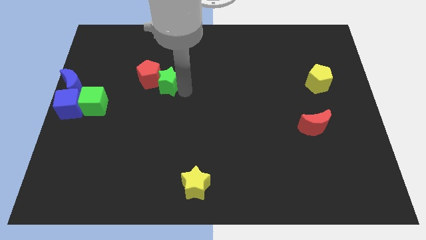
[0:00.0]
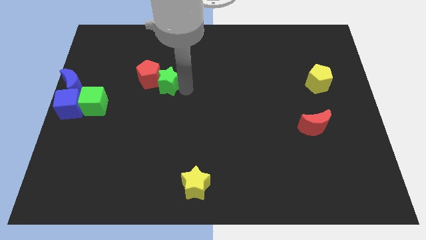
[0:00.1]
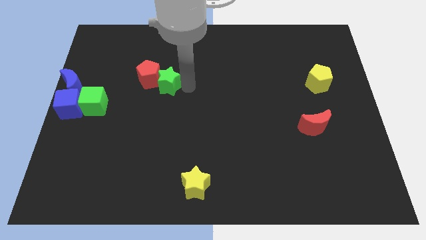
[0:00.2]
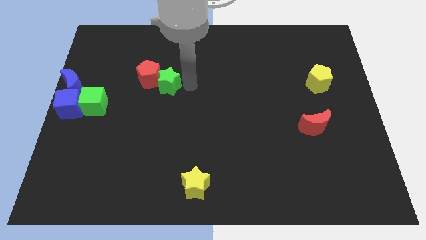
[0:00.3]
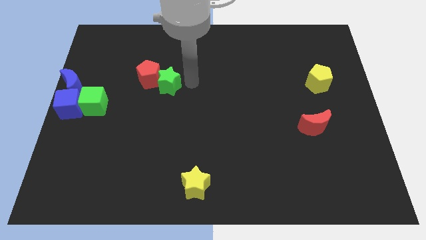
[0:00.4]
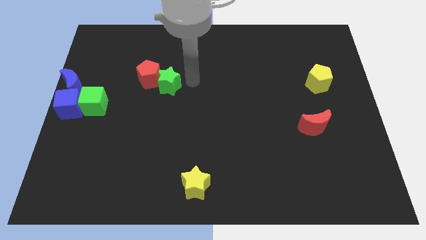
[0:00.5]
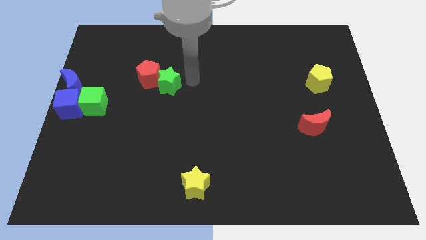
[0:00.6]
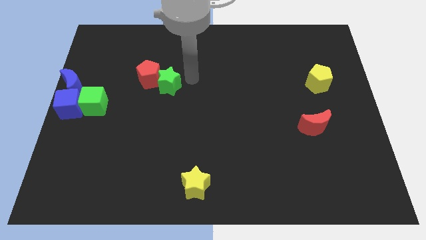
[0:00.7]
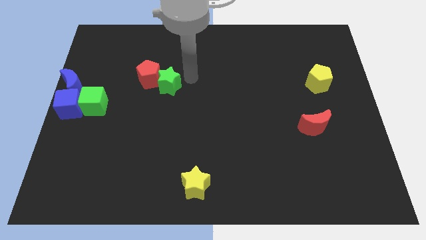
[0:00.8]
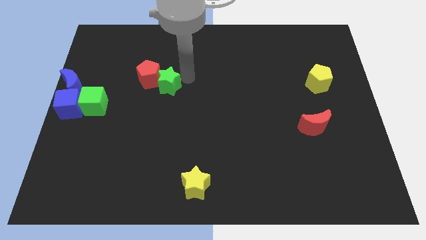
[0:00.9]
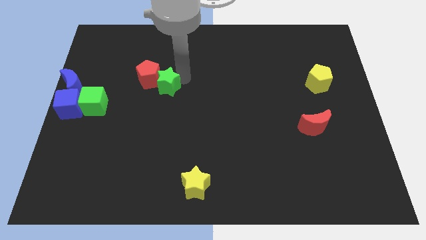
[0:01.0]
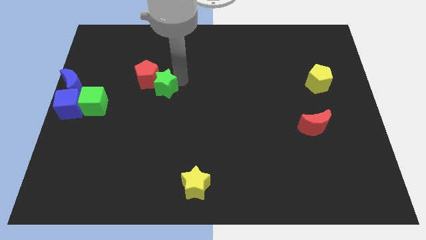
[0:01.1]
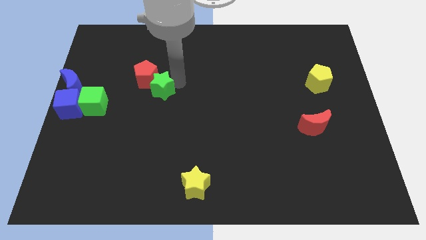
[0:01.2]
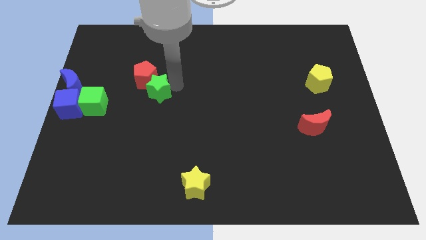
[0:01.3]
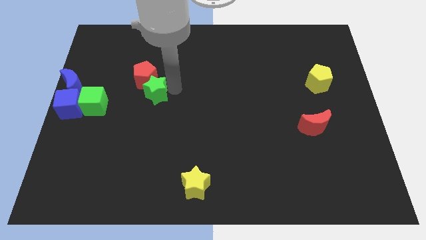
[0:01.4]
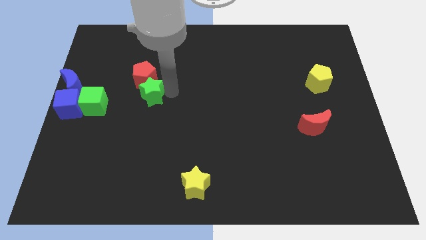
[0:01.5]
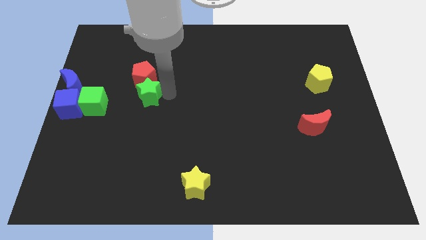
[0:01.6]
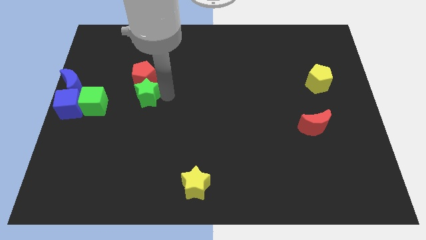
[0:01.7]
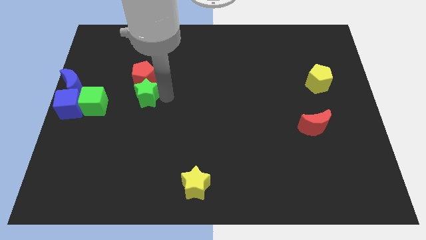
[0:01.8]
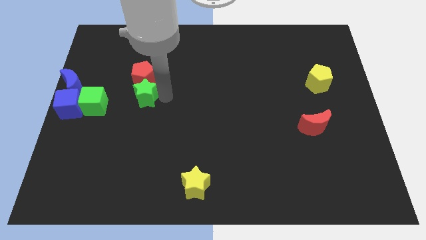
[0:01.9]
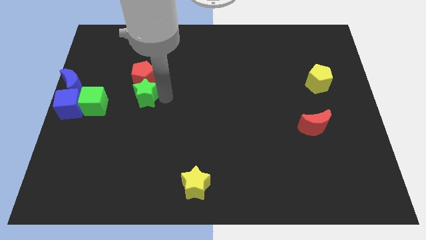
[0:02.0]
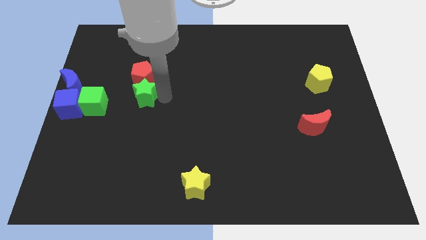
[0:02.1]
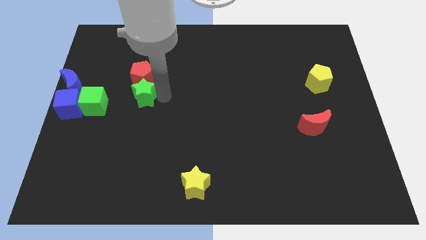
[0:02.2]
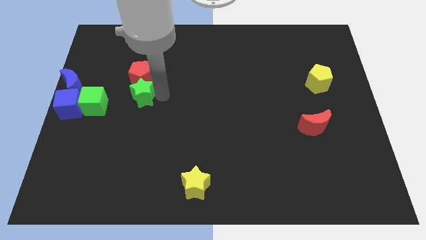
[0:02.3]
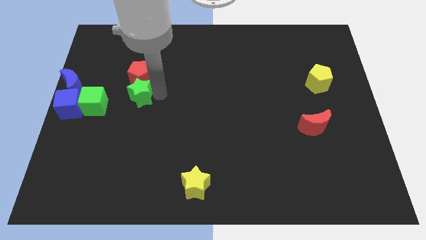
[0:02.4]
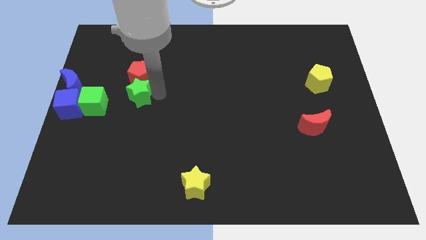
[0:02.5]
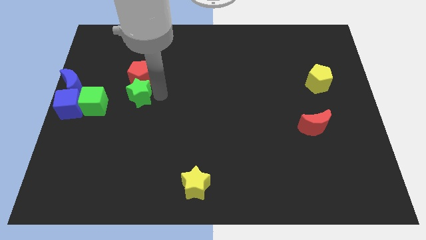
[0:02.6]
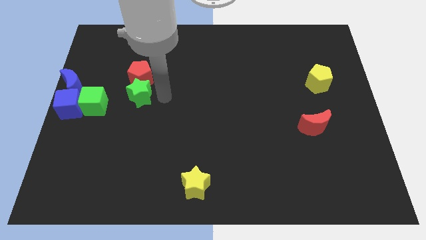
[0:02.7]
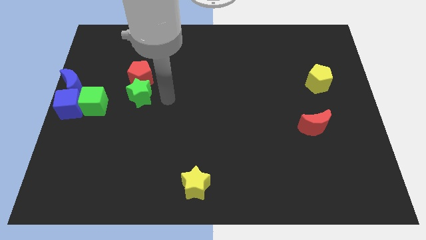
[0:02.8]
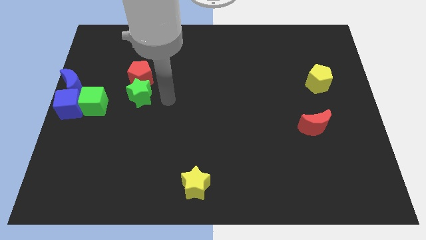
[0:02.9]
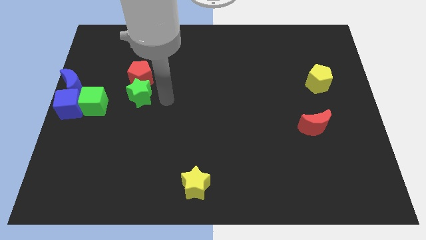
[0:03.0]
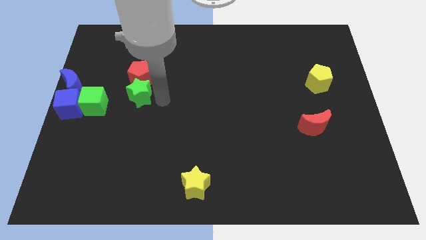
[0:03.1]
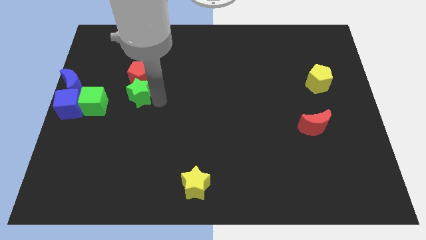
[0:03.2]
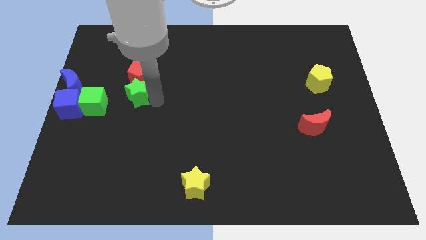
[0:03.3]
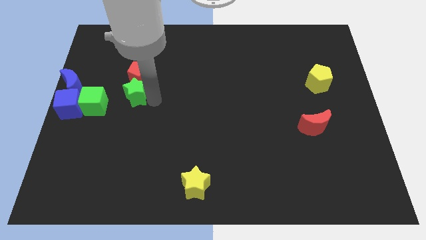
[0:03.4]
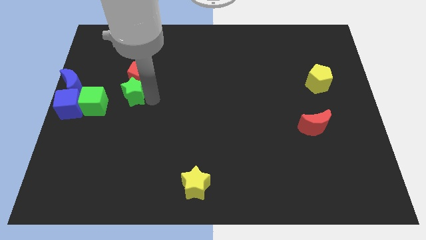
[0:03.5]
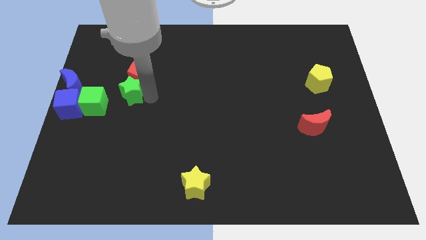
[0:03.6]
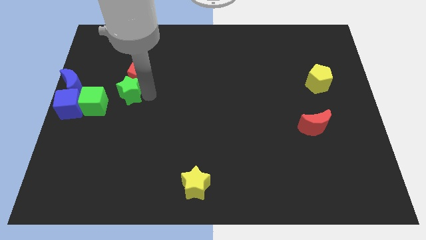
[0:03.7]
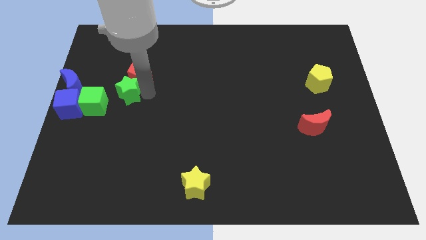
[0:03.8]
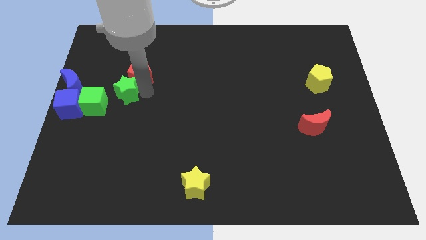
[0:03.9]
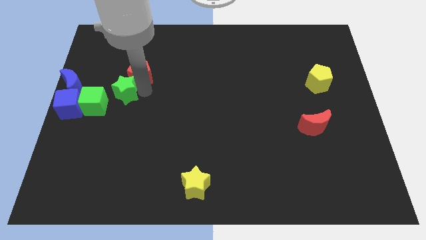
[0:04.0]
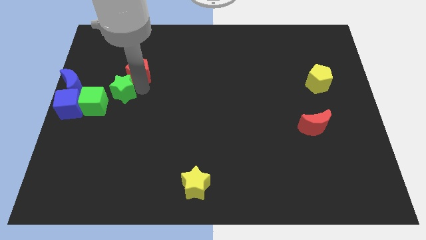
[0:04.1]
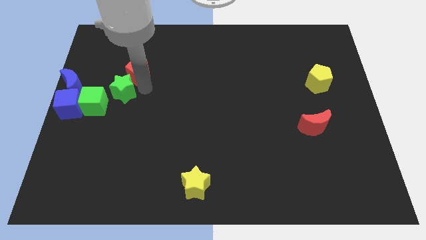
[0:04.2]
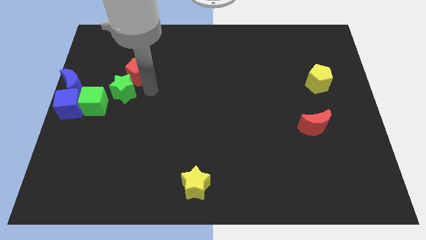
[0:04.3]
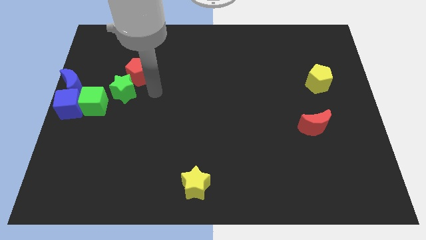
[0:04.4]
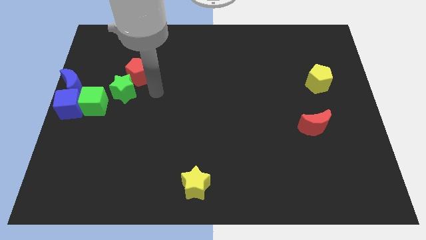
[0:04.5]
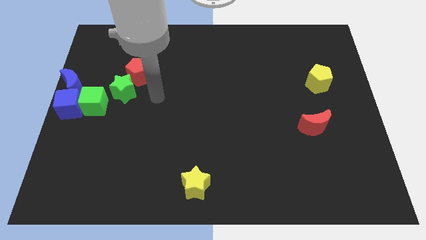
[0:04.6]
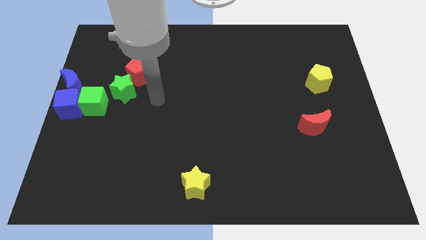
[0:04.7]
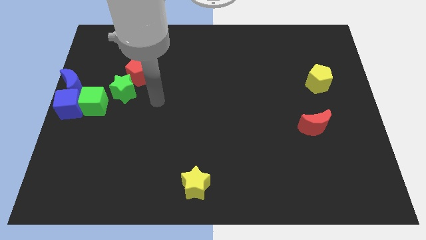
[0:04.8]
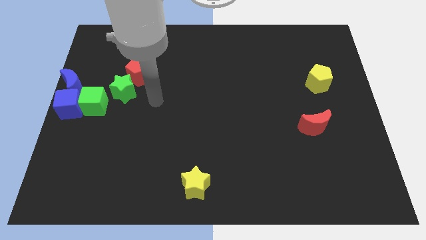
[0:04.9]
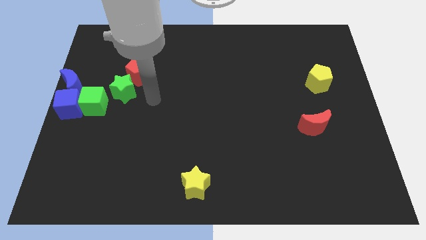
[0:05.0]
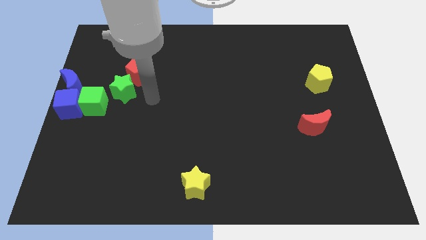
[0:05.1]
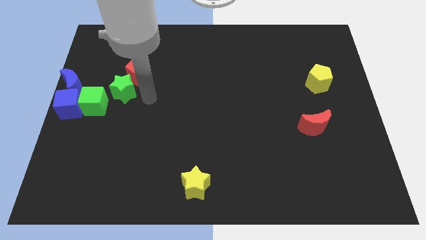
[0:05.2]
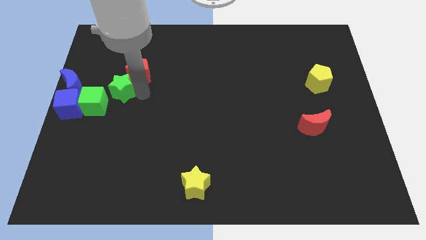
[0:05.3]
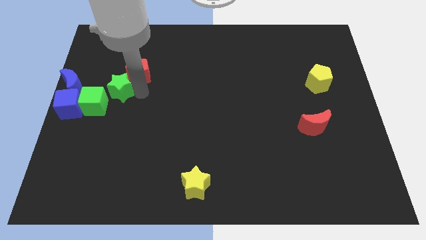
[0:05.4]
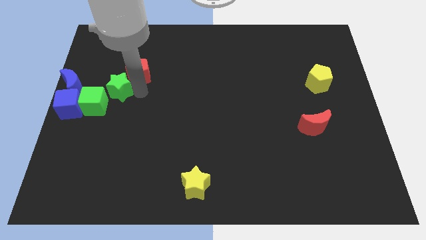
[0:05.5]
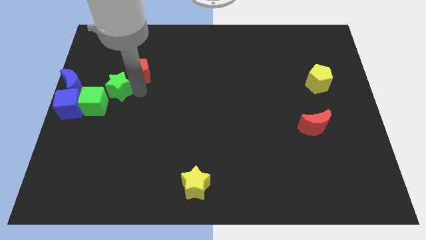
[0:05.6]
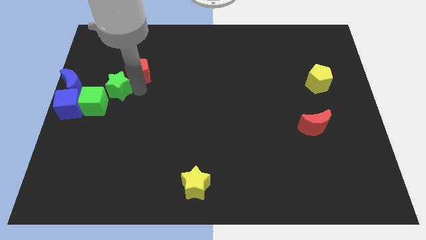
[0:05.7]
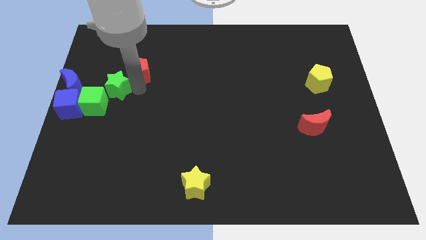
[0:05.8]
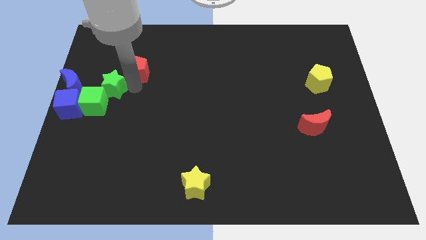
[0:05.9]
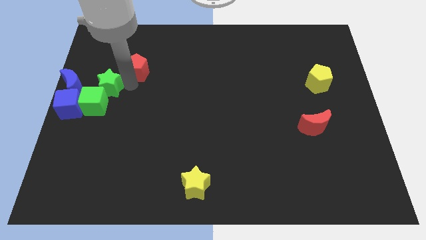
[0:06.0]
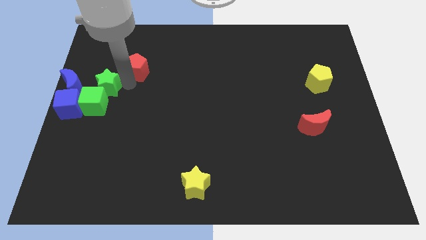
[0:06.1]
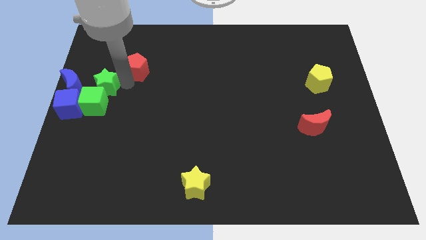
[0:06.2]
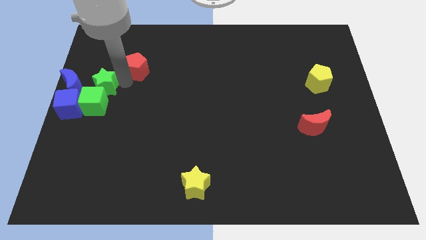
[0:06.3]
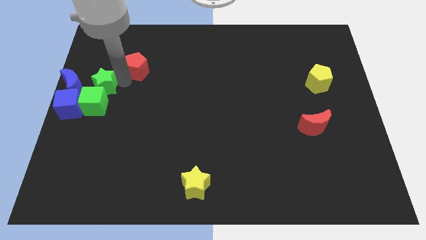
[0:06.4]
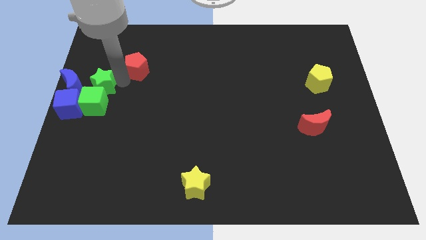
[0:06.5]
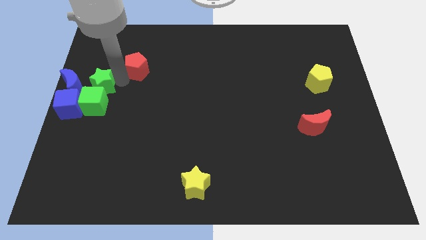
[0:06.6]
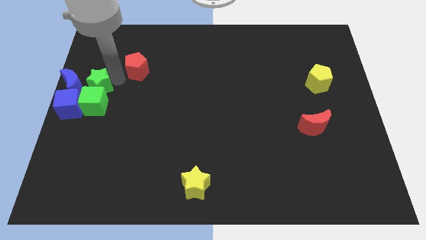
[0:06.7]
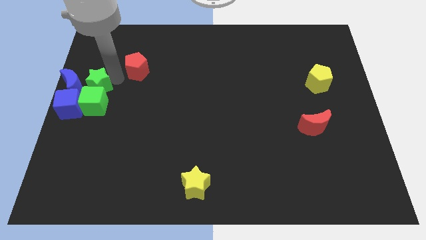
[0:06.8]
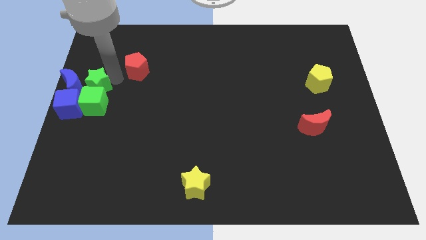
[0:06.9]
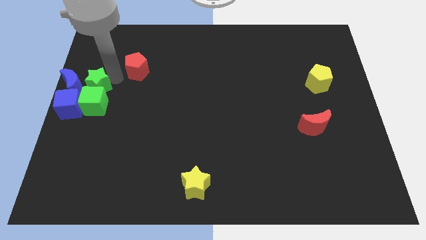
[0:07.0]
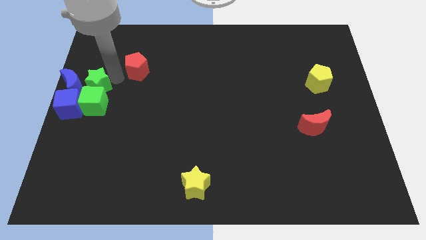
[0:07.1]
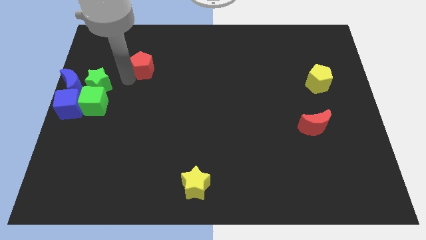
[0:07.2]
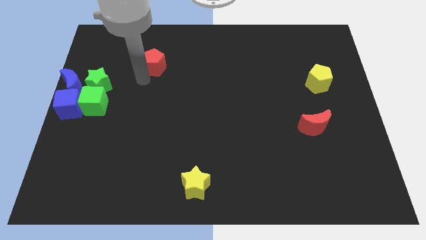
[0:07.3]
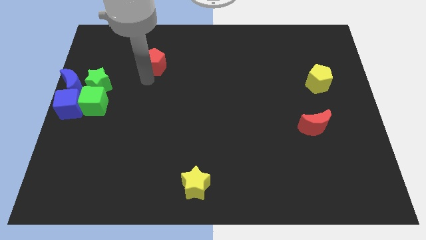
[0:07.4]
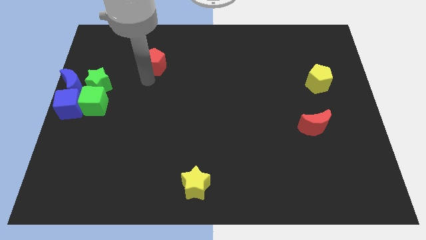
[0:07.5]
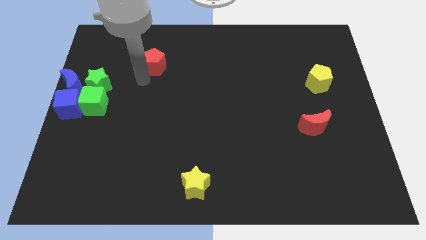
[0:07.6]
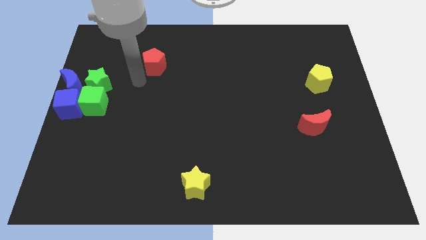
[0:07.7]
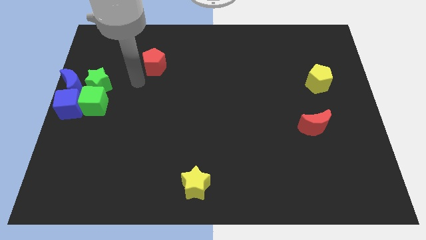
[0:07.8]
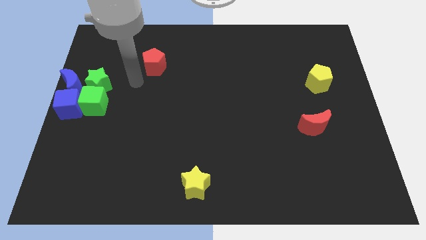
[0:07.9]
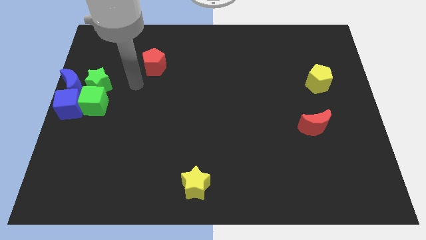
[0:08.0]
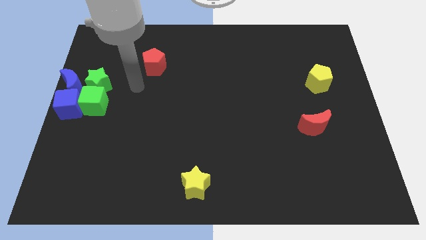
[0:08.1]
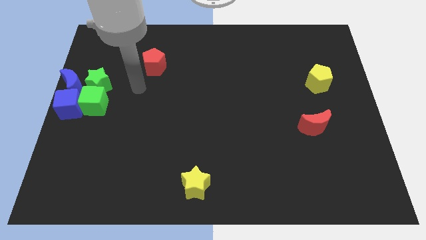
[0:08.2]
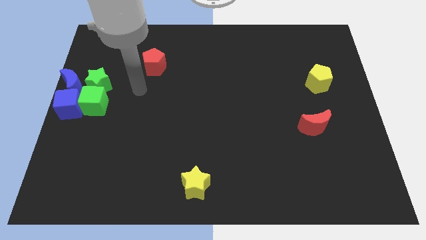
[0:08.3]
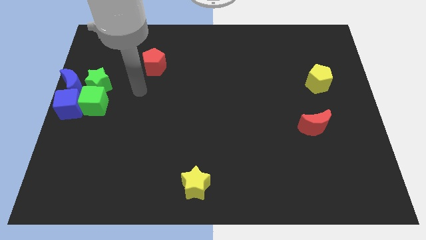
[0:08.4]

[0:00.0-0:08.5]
place the green star to the top of green cube

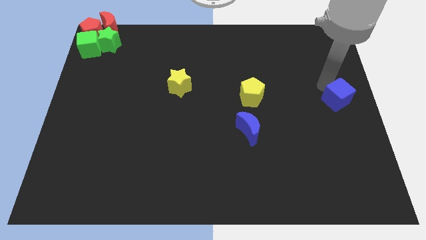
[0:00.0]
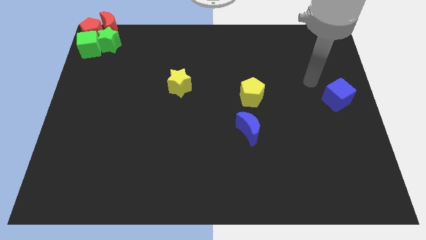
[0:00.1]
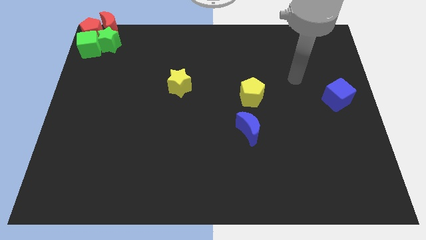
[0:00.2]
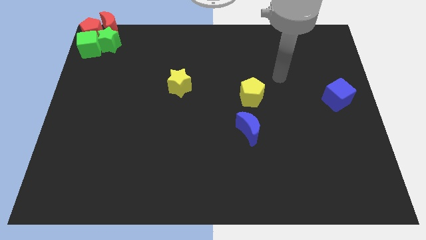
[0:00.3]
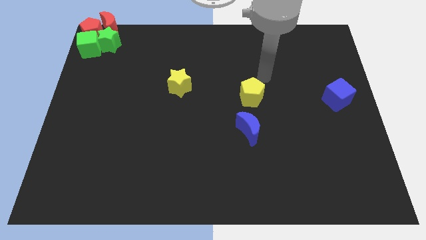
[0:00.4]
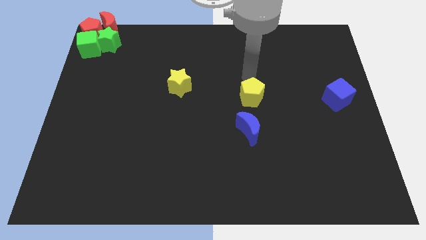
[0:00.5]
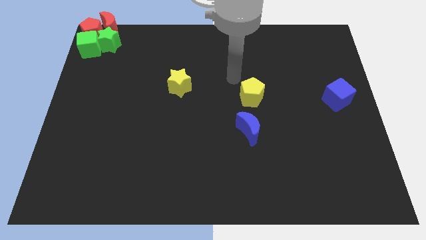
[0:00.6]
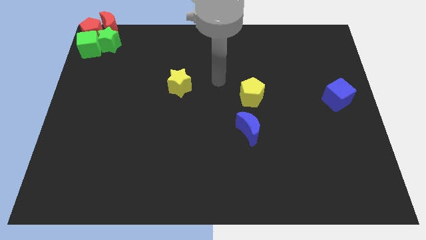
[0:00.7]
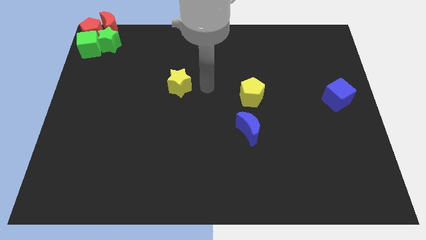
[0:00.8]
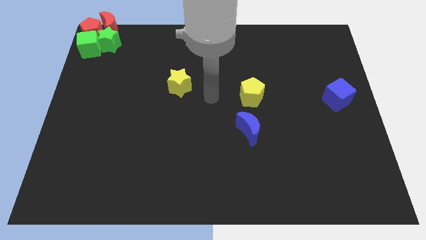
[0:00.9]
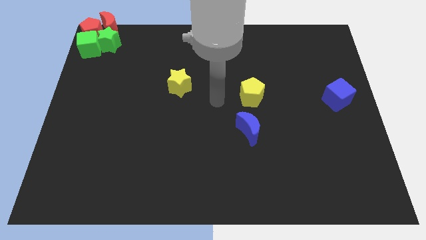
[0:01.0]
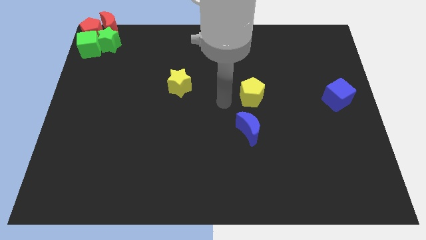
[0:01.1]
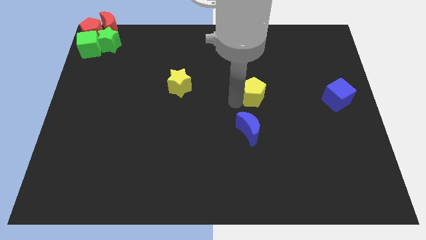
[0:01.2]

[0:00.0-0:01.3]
move the arm away from the blue cube
